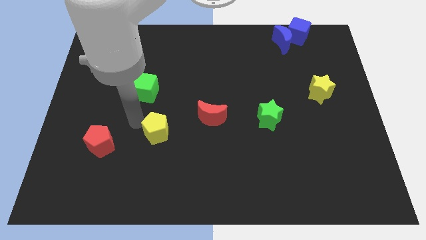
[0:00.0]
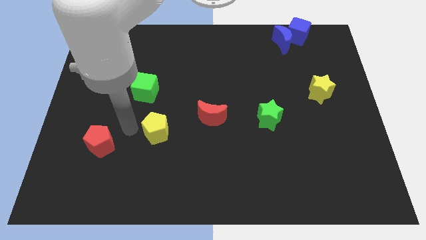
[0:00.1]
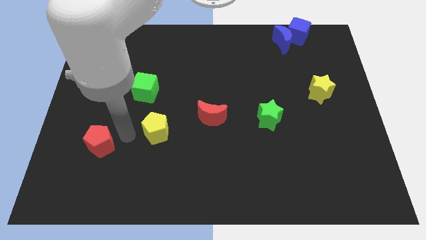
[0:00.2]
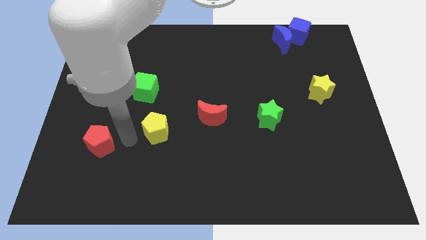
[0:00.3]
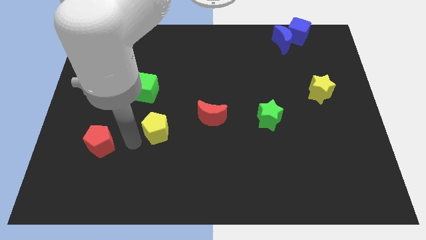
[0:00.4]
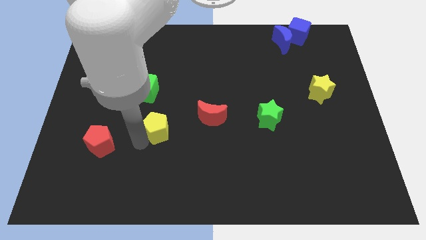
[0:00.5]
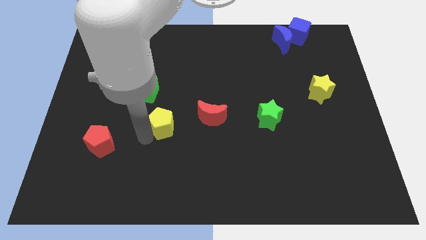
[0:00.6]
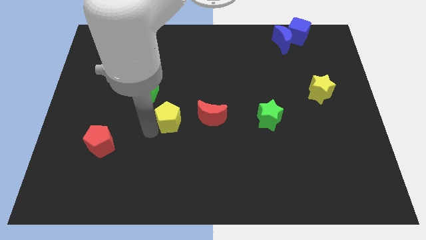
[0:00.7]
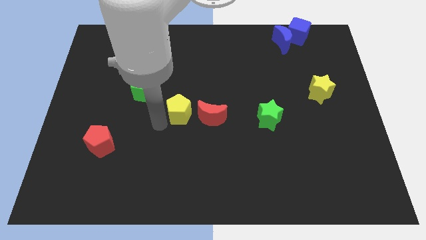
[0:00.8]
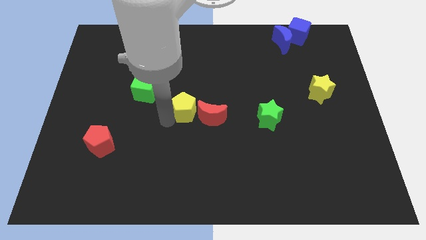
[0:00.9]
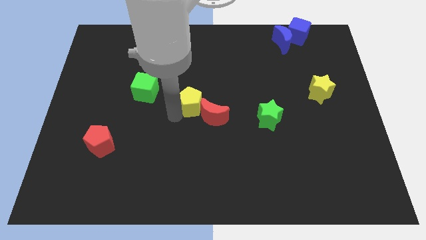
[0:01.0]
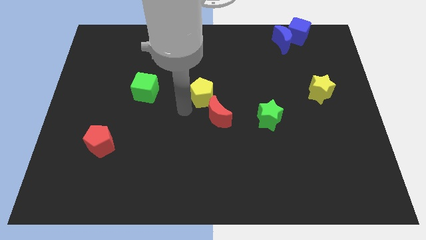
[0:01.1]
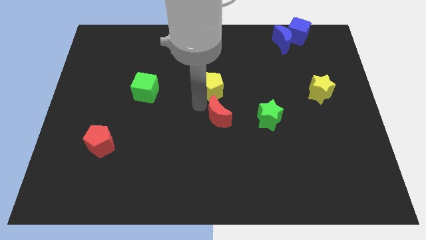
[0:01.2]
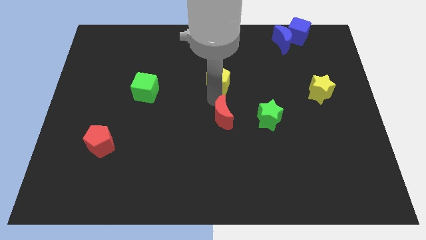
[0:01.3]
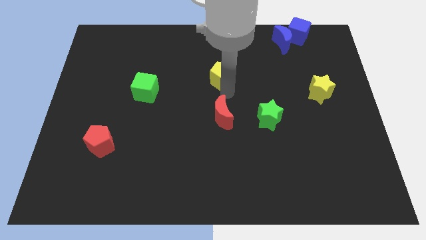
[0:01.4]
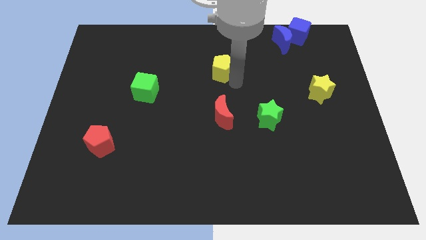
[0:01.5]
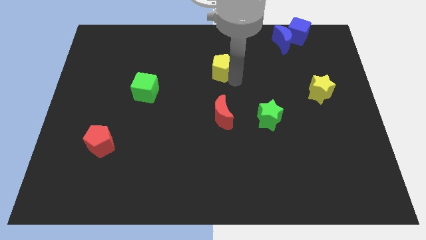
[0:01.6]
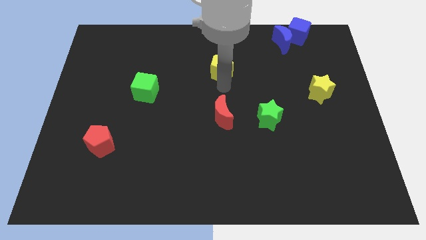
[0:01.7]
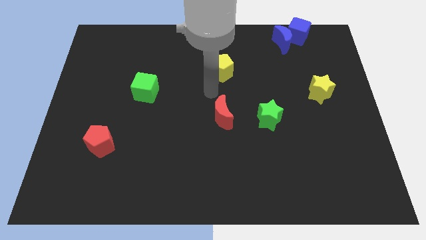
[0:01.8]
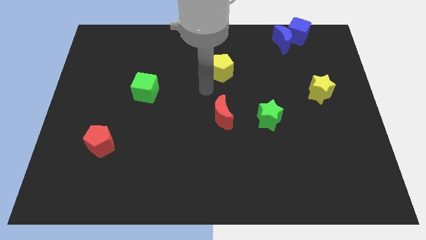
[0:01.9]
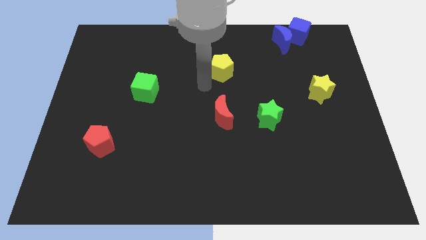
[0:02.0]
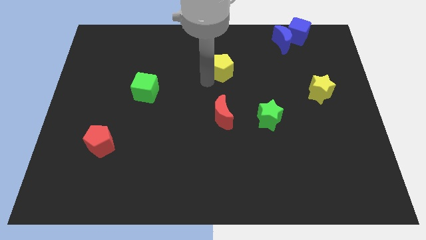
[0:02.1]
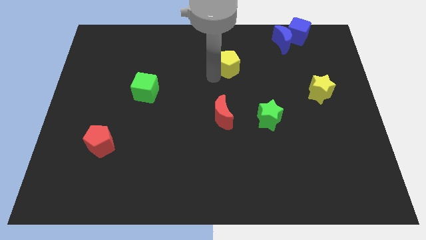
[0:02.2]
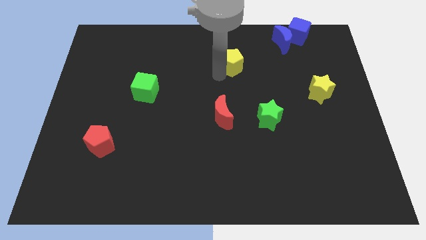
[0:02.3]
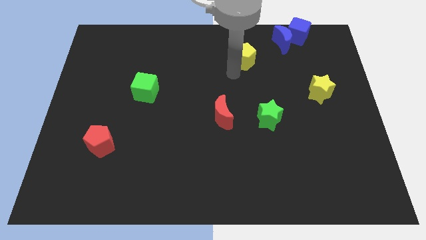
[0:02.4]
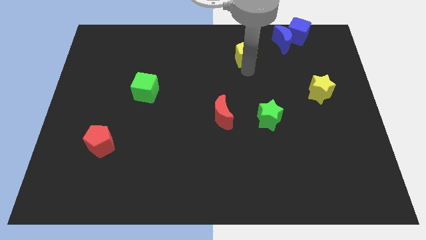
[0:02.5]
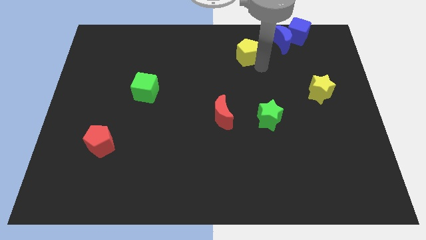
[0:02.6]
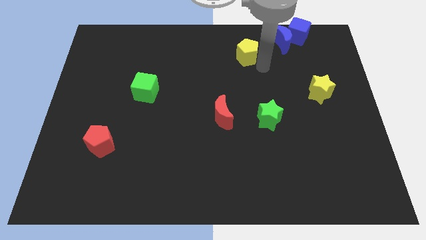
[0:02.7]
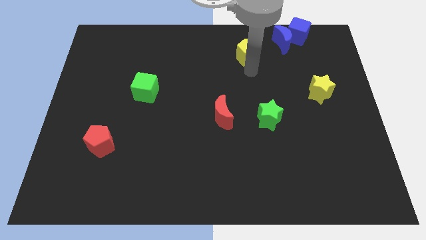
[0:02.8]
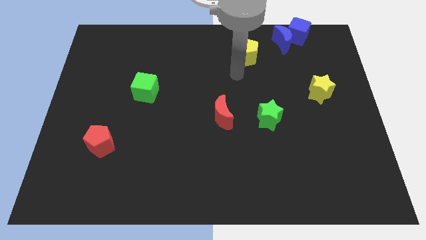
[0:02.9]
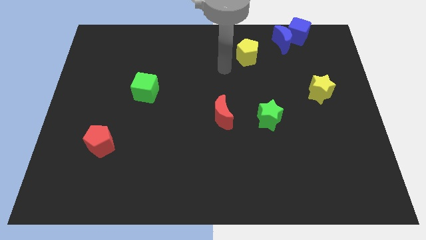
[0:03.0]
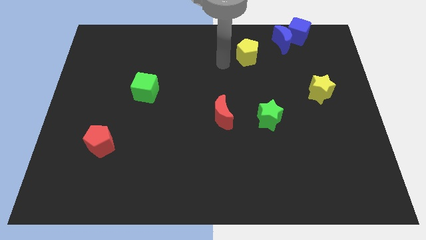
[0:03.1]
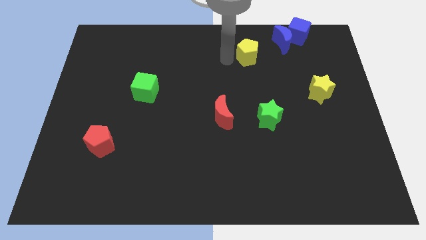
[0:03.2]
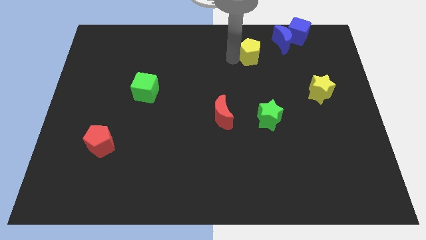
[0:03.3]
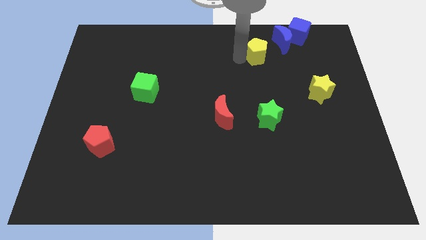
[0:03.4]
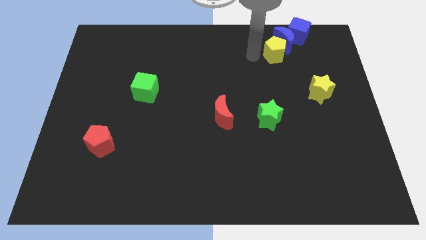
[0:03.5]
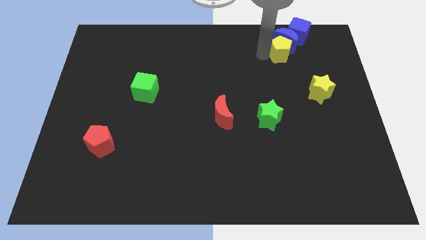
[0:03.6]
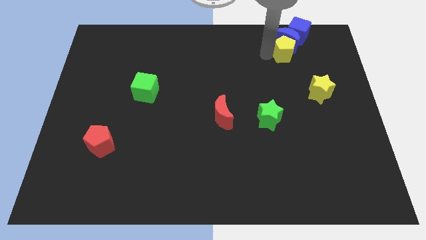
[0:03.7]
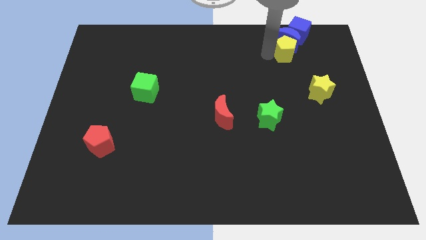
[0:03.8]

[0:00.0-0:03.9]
push yellow pentagon beside blue moon

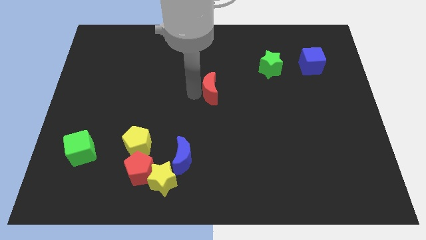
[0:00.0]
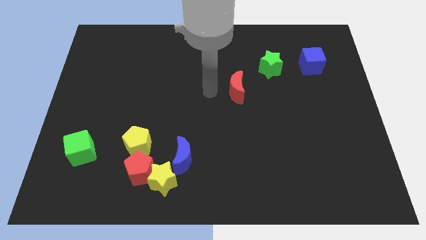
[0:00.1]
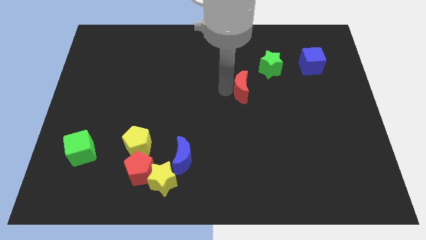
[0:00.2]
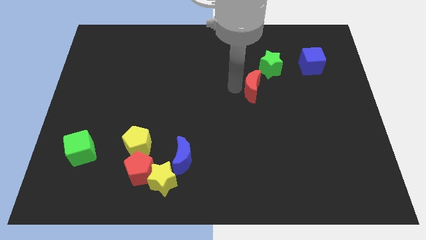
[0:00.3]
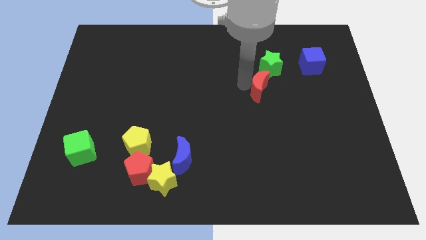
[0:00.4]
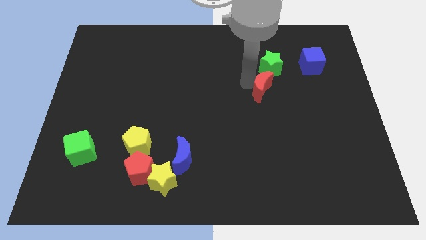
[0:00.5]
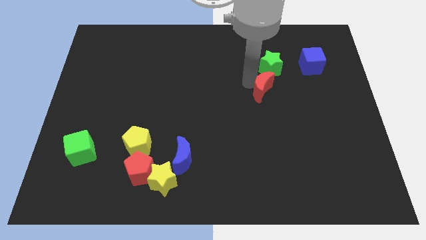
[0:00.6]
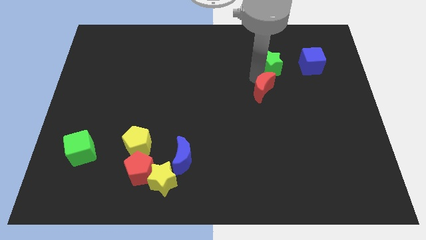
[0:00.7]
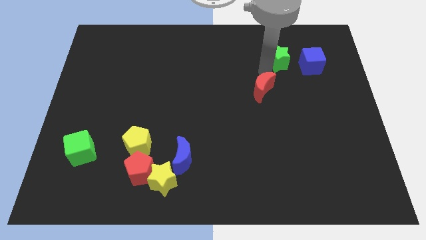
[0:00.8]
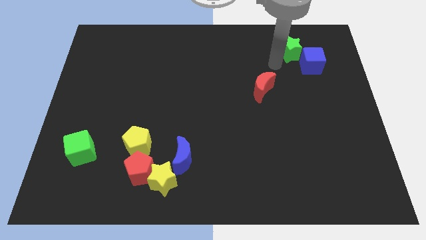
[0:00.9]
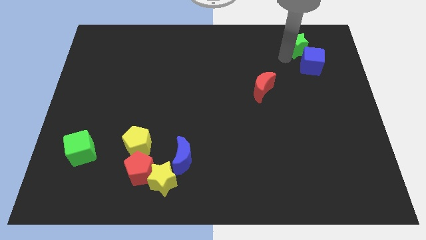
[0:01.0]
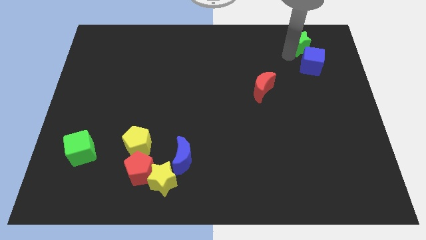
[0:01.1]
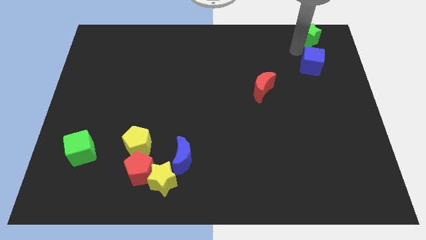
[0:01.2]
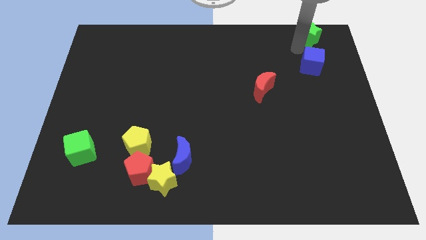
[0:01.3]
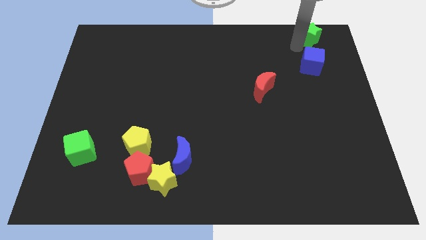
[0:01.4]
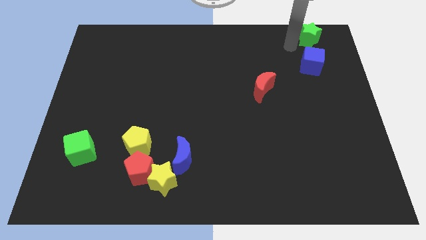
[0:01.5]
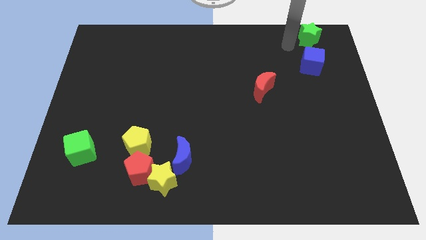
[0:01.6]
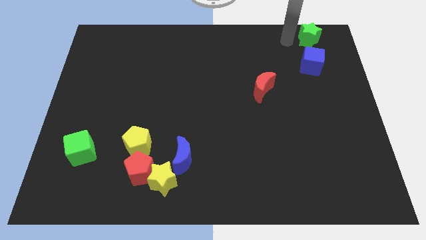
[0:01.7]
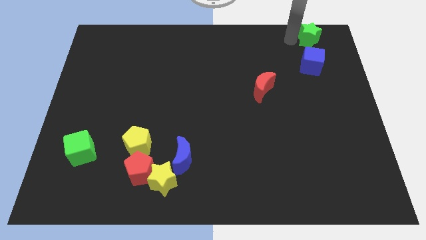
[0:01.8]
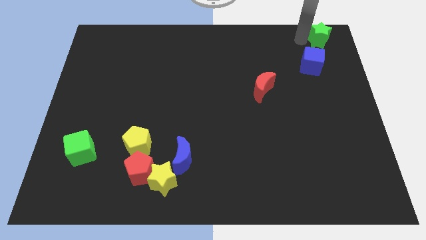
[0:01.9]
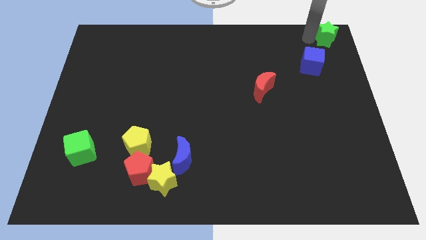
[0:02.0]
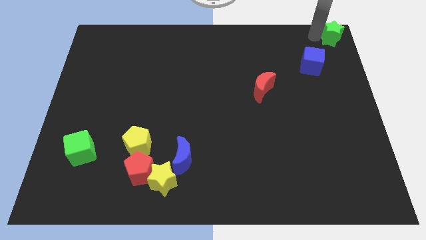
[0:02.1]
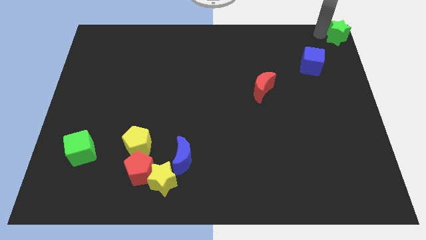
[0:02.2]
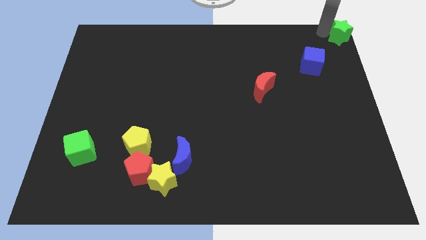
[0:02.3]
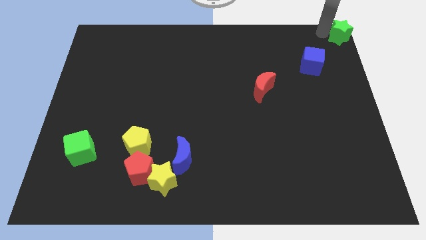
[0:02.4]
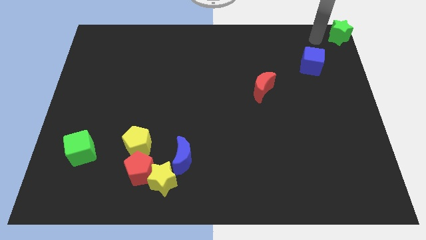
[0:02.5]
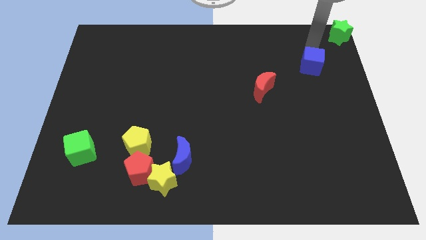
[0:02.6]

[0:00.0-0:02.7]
separate green star and red crescent

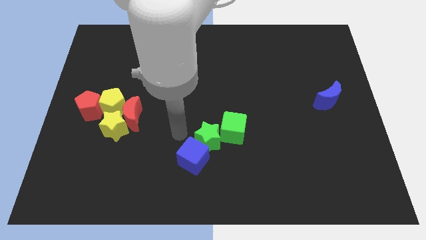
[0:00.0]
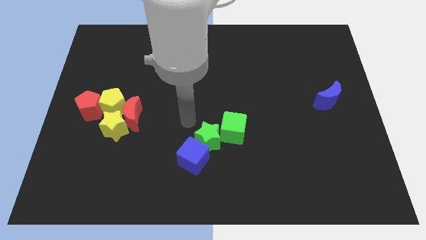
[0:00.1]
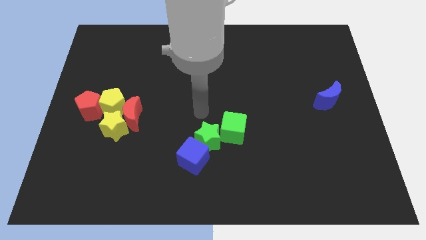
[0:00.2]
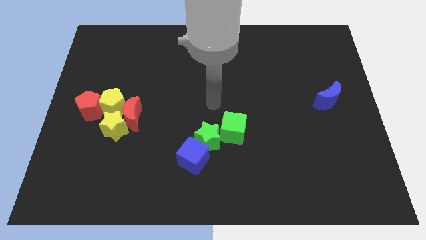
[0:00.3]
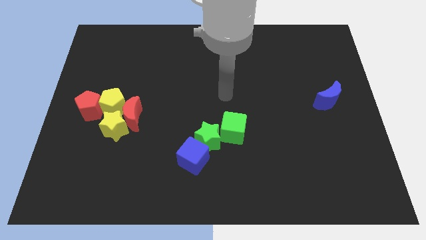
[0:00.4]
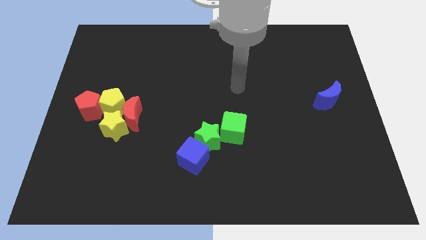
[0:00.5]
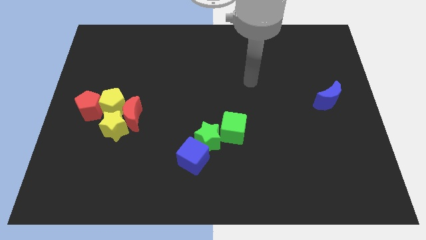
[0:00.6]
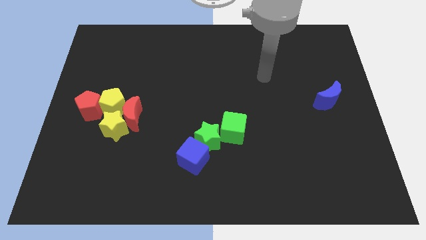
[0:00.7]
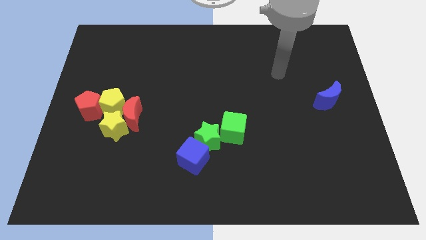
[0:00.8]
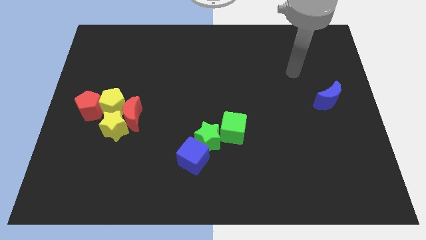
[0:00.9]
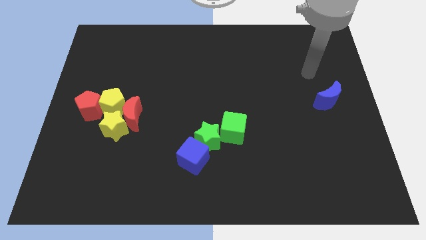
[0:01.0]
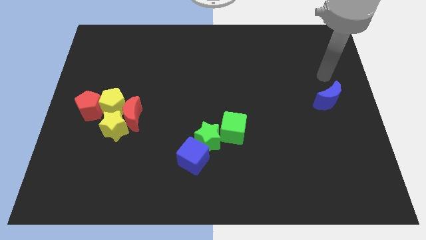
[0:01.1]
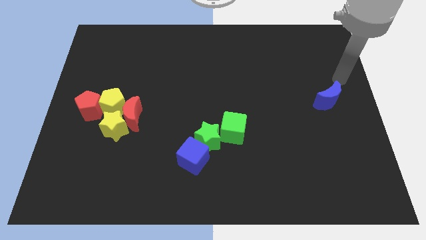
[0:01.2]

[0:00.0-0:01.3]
move your hand towards the blue moon

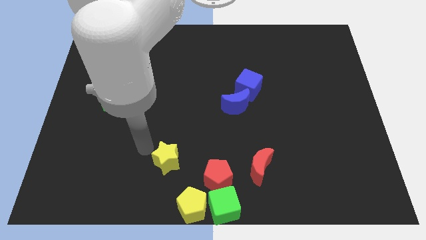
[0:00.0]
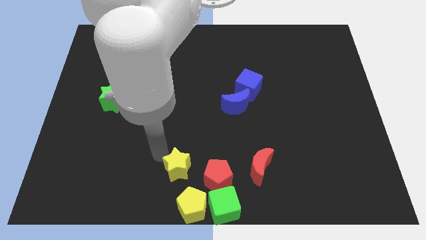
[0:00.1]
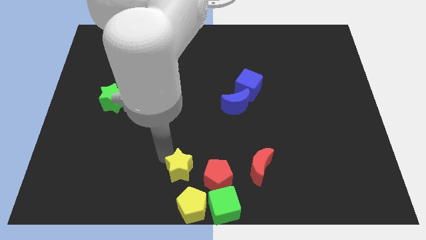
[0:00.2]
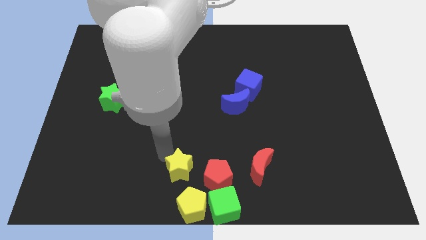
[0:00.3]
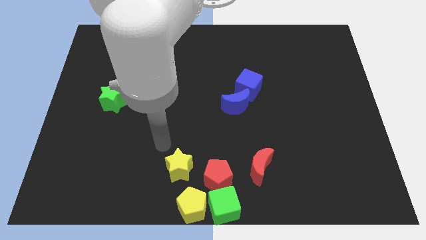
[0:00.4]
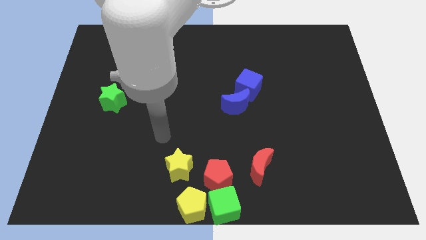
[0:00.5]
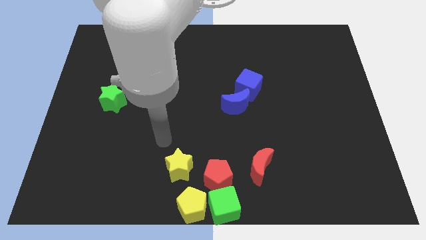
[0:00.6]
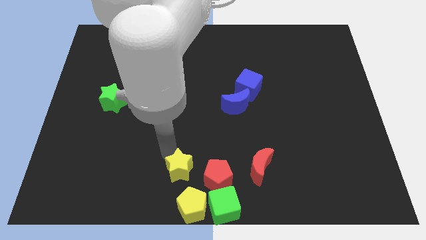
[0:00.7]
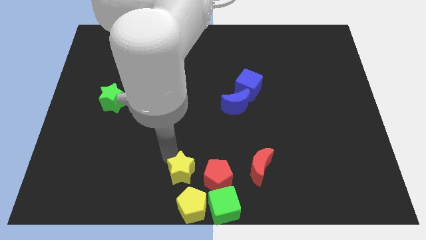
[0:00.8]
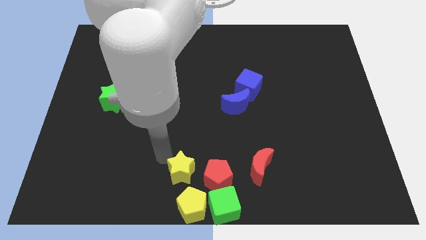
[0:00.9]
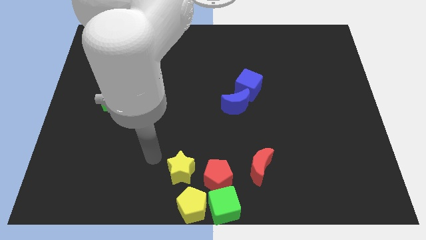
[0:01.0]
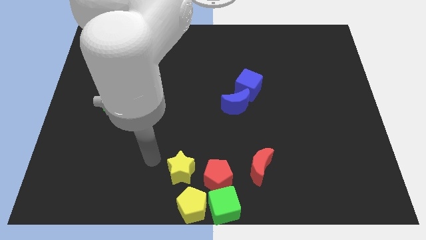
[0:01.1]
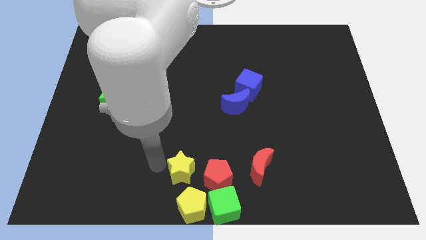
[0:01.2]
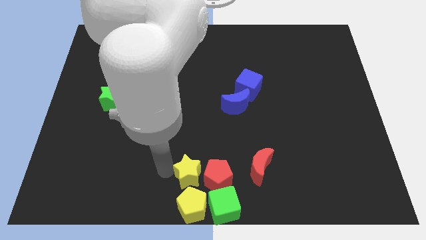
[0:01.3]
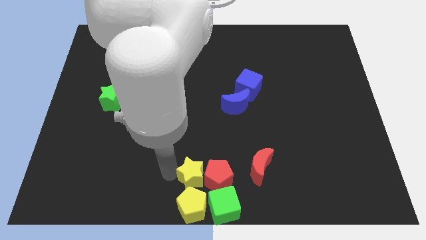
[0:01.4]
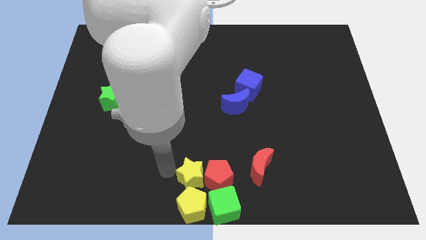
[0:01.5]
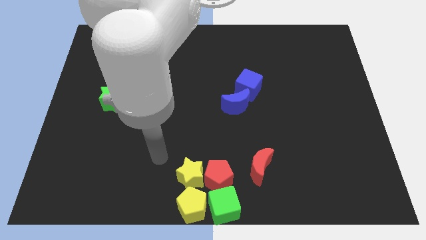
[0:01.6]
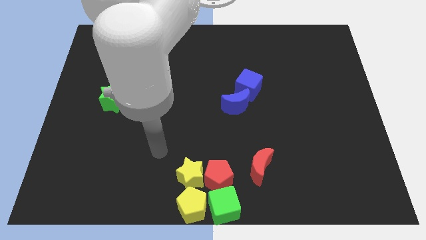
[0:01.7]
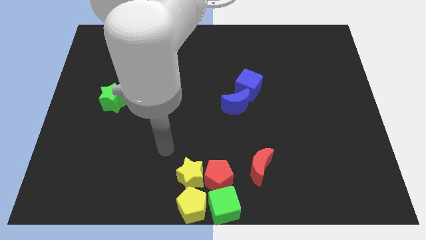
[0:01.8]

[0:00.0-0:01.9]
move the yellow star towards yellow pentagon
